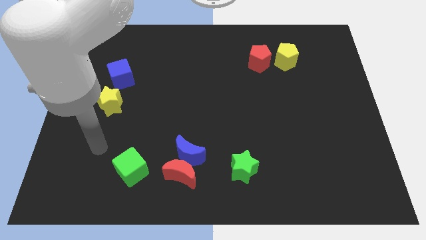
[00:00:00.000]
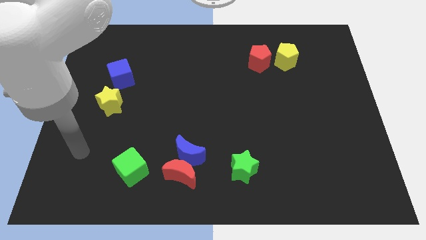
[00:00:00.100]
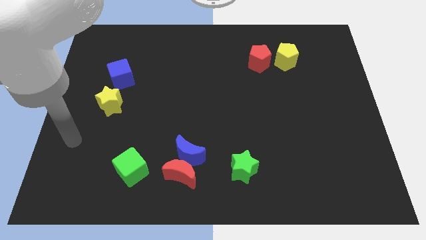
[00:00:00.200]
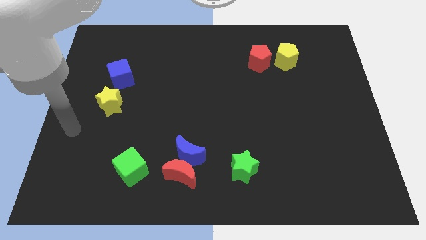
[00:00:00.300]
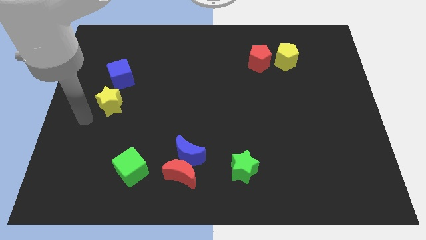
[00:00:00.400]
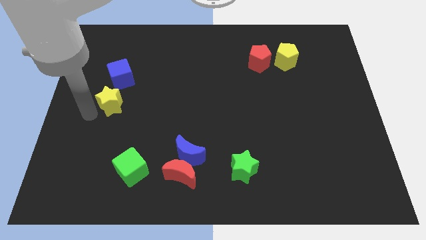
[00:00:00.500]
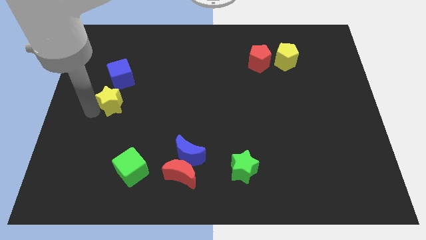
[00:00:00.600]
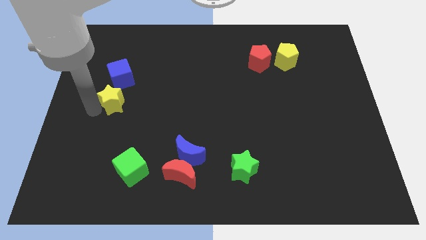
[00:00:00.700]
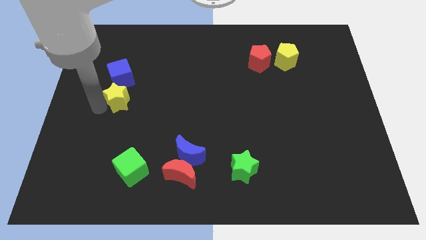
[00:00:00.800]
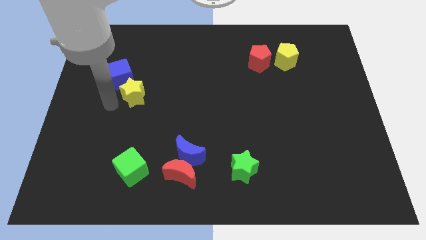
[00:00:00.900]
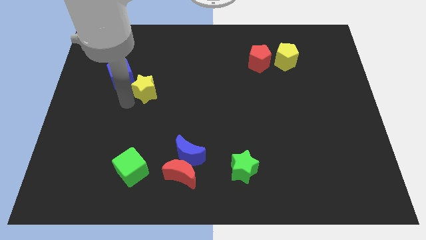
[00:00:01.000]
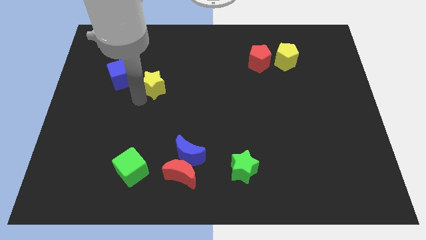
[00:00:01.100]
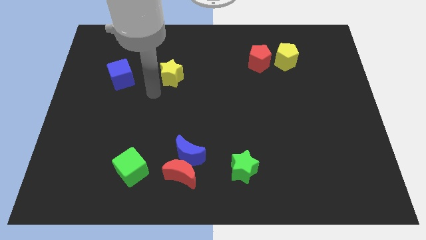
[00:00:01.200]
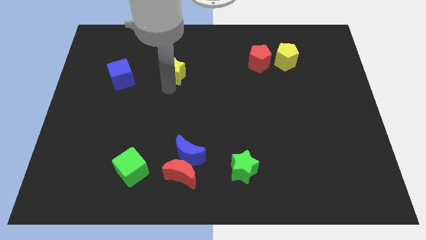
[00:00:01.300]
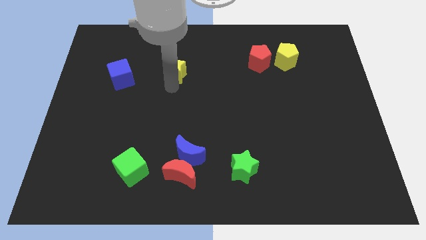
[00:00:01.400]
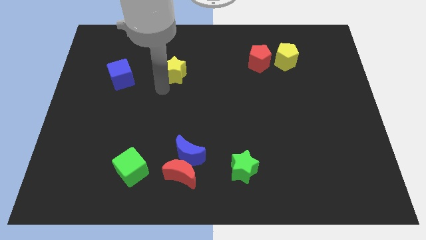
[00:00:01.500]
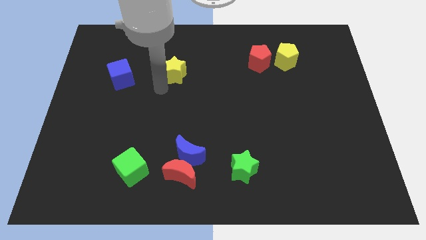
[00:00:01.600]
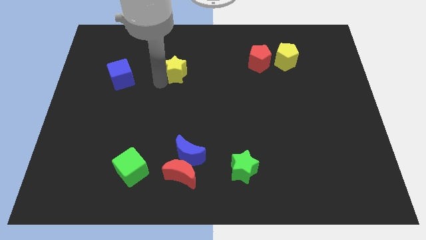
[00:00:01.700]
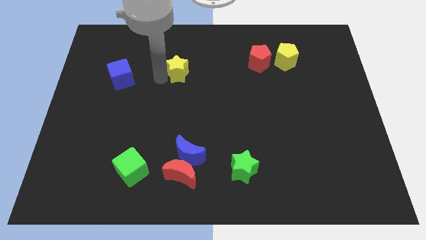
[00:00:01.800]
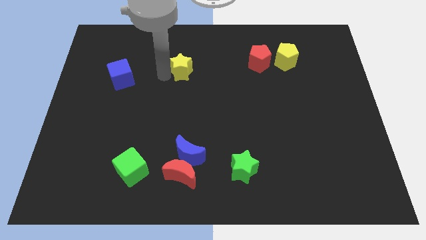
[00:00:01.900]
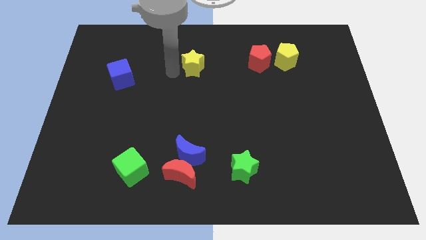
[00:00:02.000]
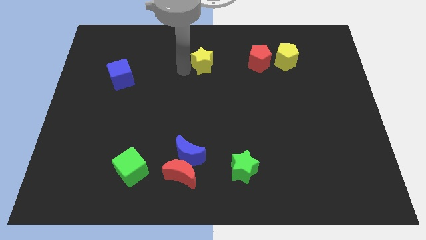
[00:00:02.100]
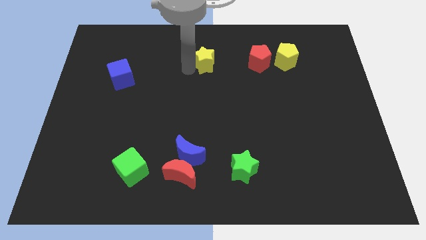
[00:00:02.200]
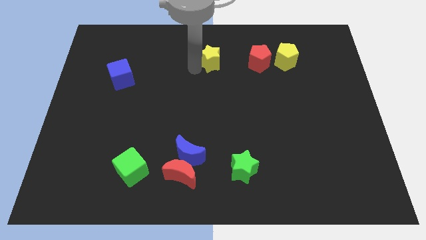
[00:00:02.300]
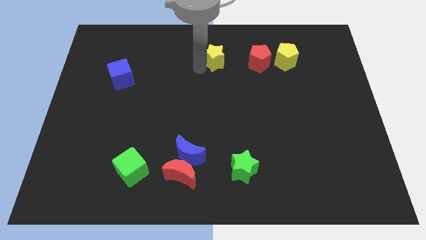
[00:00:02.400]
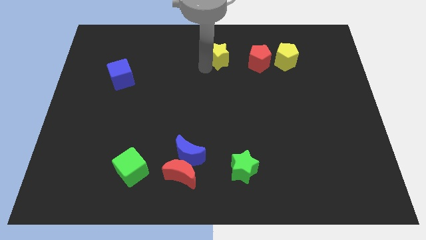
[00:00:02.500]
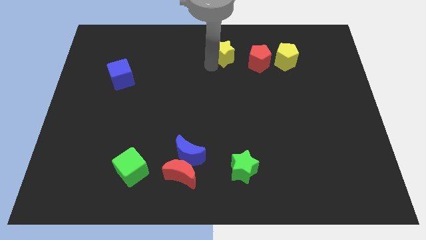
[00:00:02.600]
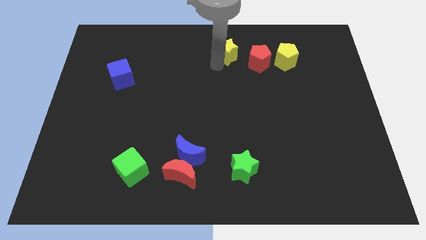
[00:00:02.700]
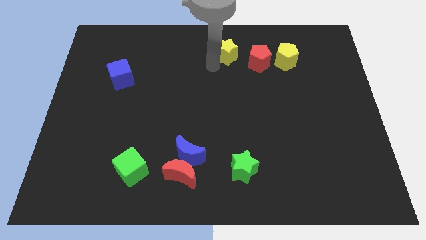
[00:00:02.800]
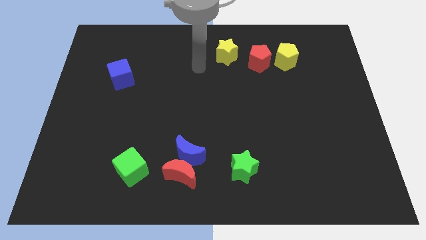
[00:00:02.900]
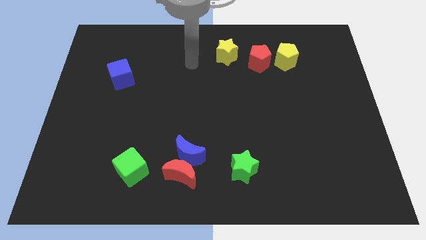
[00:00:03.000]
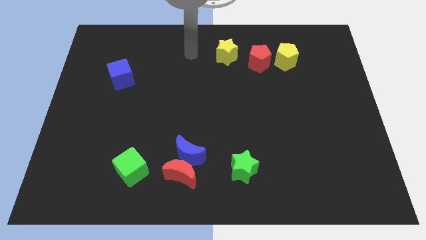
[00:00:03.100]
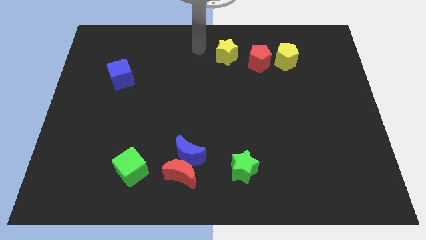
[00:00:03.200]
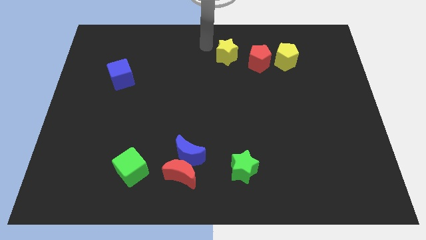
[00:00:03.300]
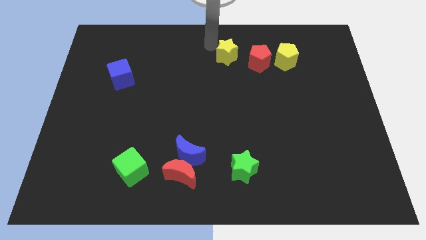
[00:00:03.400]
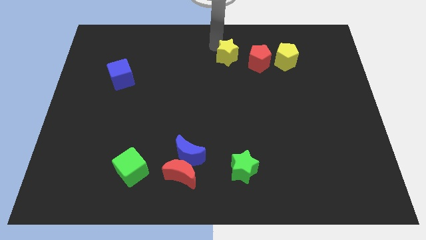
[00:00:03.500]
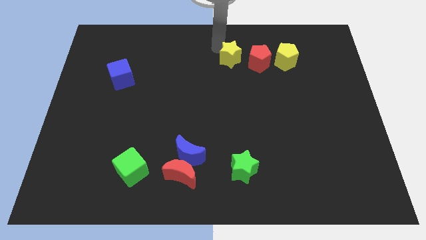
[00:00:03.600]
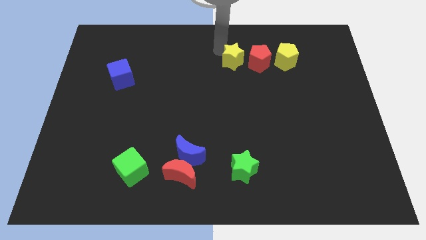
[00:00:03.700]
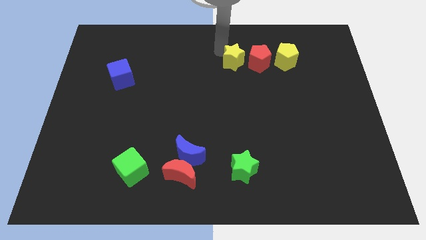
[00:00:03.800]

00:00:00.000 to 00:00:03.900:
place the yellow star to the left of red pentagon

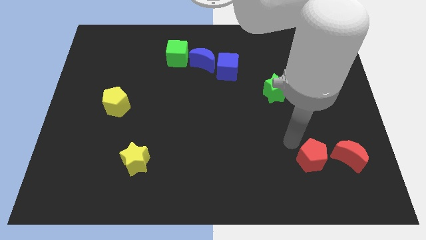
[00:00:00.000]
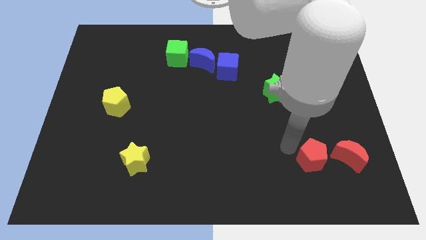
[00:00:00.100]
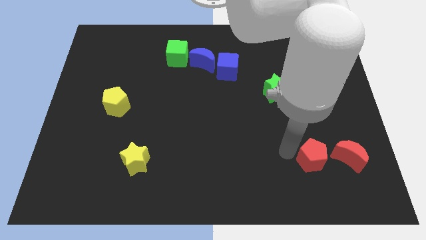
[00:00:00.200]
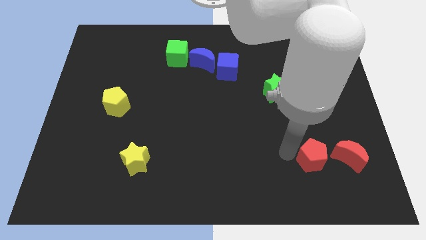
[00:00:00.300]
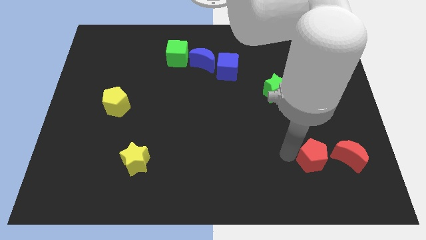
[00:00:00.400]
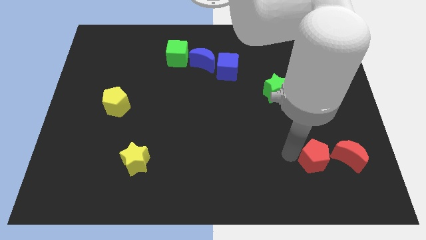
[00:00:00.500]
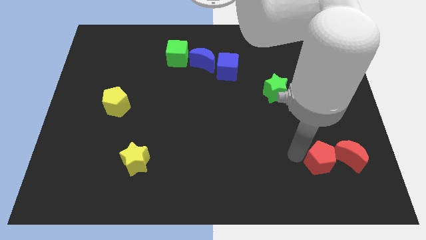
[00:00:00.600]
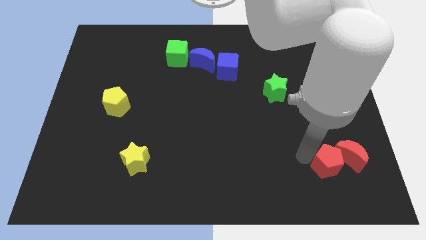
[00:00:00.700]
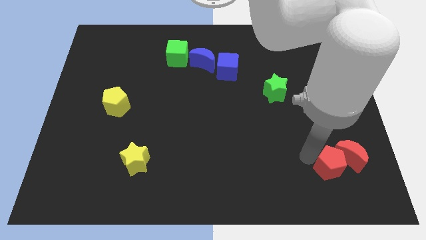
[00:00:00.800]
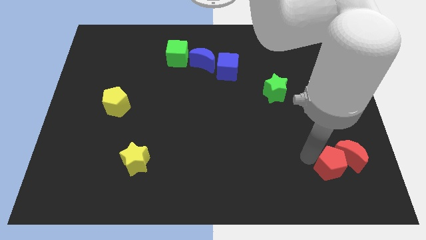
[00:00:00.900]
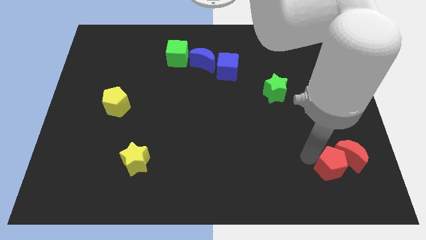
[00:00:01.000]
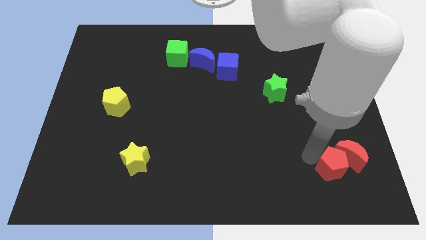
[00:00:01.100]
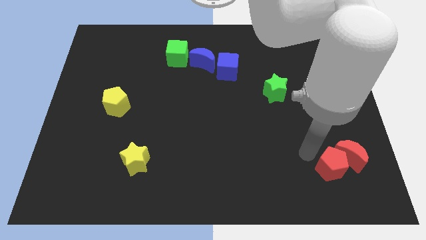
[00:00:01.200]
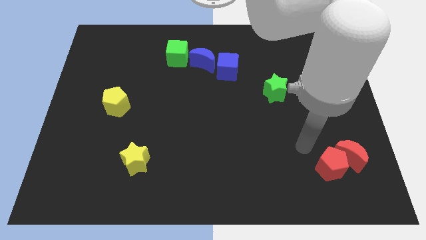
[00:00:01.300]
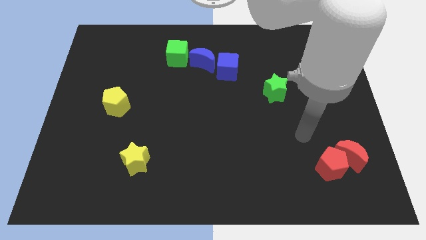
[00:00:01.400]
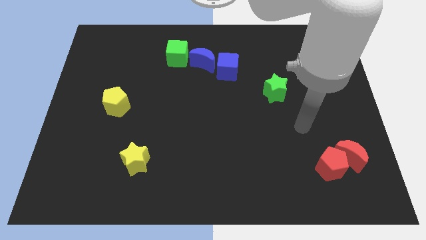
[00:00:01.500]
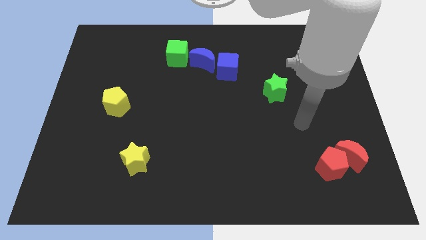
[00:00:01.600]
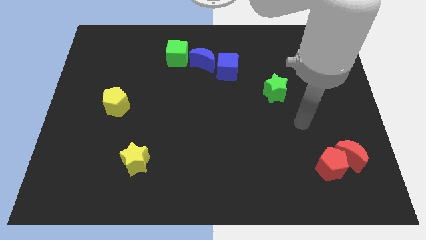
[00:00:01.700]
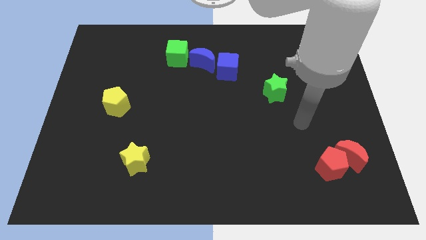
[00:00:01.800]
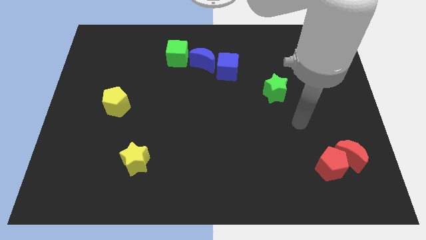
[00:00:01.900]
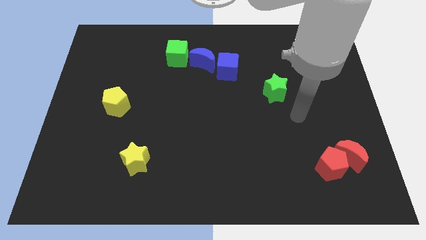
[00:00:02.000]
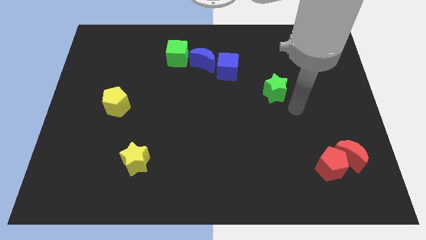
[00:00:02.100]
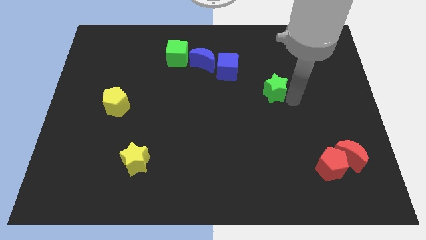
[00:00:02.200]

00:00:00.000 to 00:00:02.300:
move the red pentagon into the red crescent

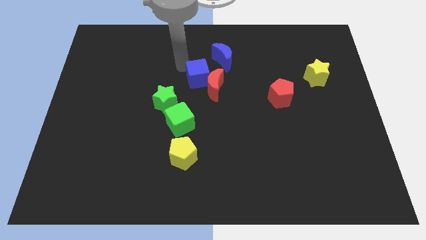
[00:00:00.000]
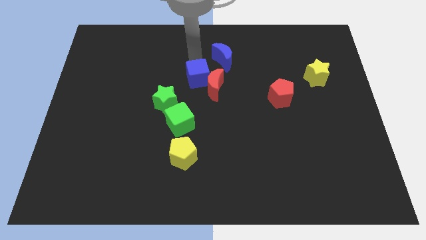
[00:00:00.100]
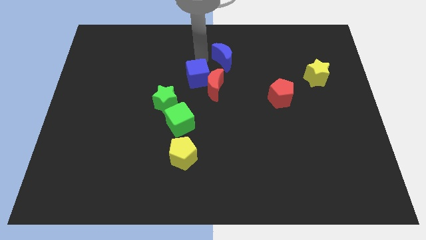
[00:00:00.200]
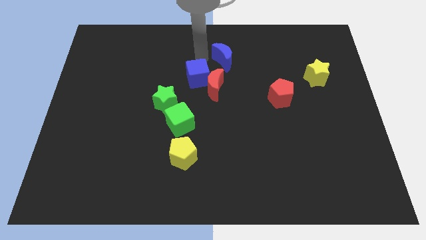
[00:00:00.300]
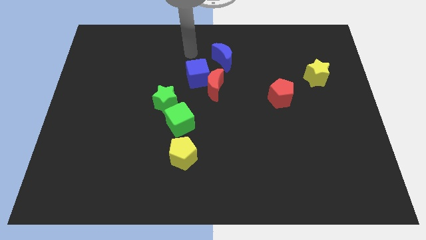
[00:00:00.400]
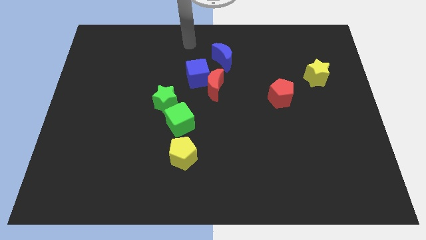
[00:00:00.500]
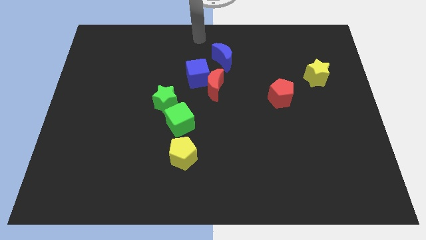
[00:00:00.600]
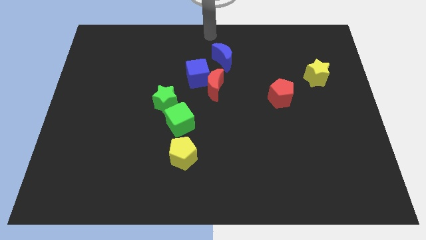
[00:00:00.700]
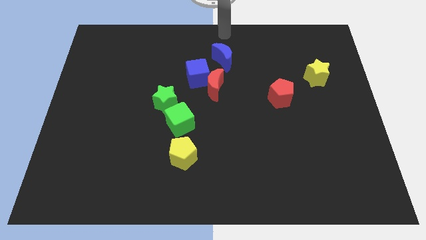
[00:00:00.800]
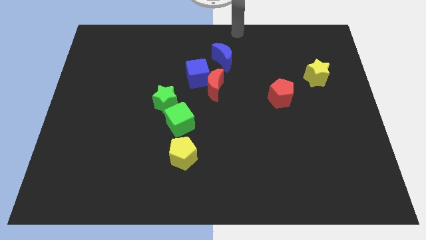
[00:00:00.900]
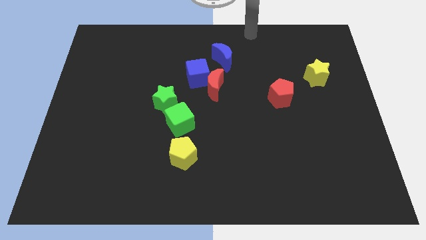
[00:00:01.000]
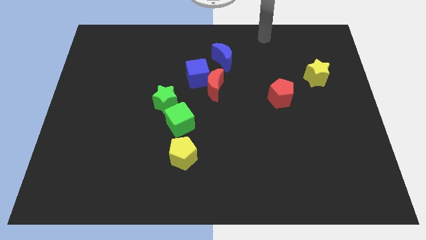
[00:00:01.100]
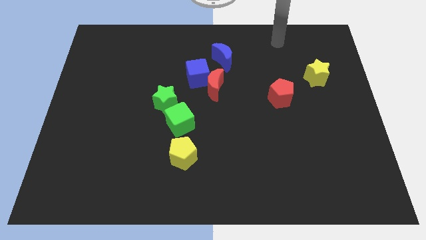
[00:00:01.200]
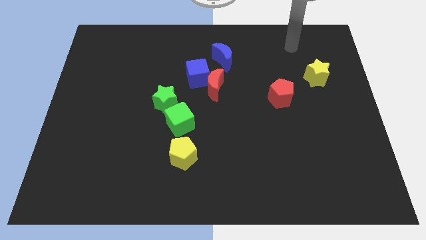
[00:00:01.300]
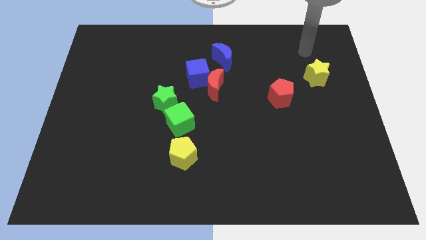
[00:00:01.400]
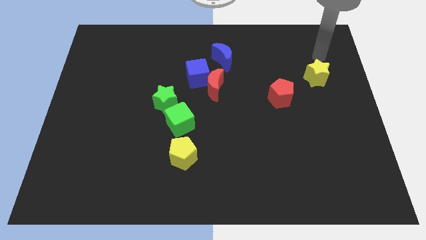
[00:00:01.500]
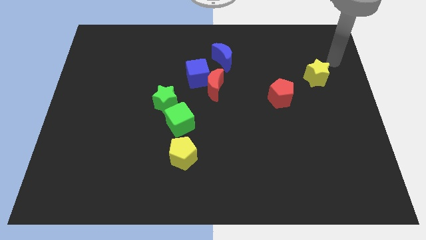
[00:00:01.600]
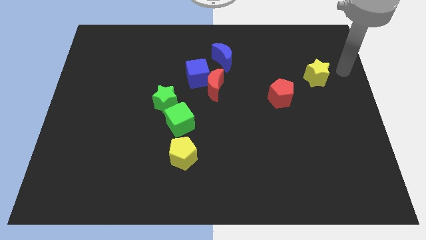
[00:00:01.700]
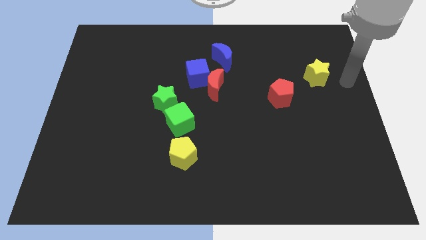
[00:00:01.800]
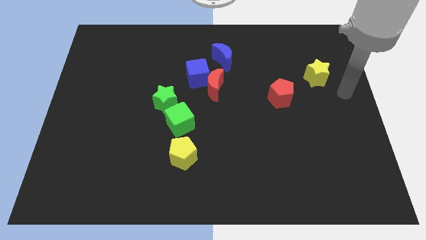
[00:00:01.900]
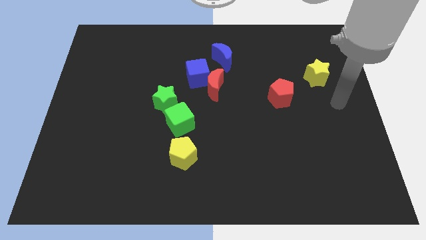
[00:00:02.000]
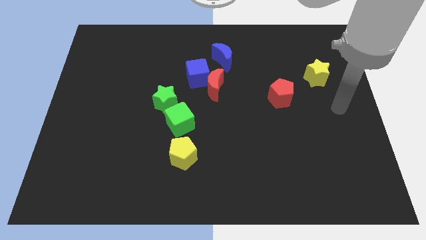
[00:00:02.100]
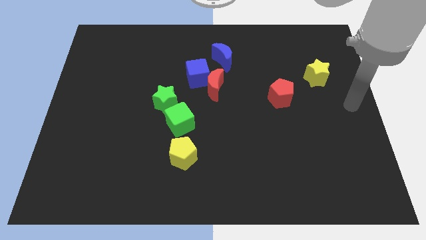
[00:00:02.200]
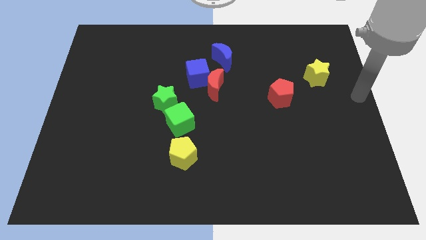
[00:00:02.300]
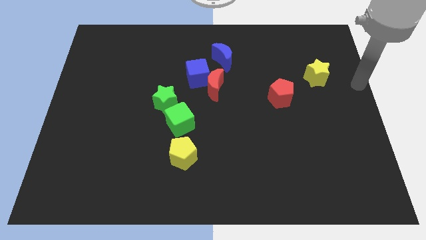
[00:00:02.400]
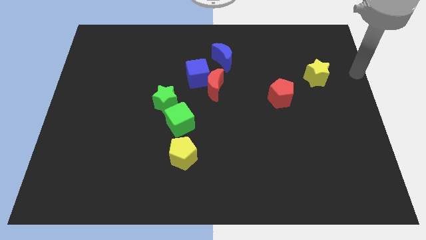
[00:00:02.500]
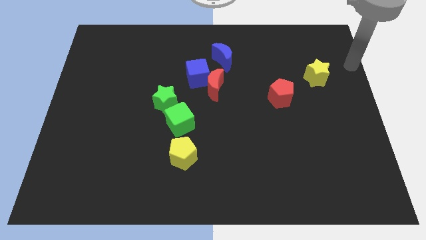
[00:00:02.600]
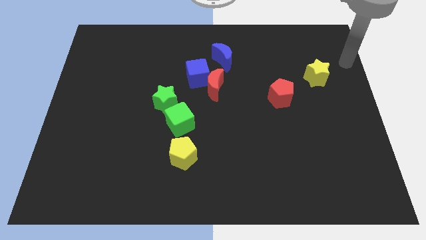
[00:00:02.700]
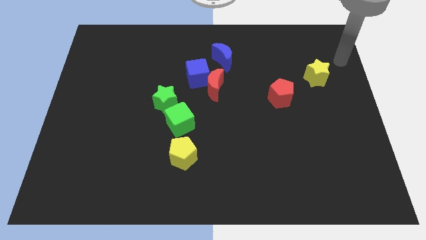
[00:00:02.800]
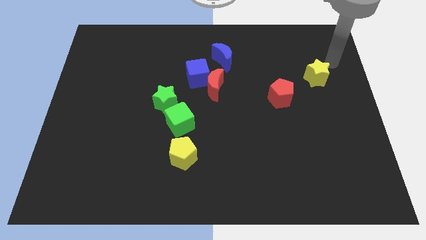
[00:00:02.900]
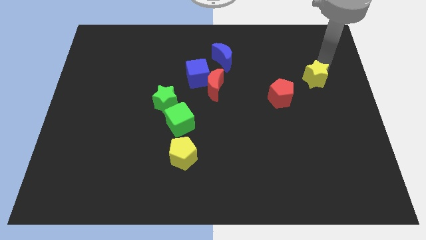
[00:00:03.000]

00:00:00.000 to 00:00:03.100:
place the arm above the yellow star
